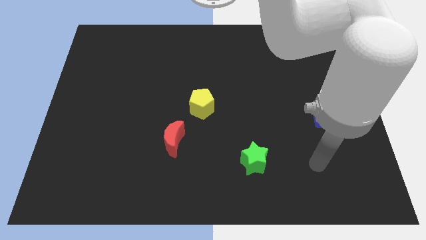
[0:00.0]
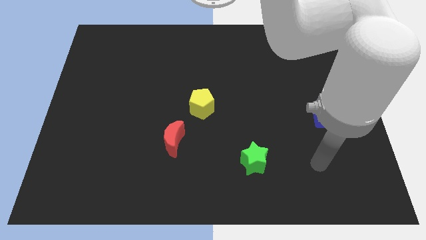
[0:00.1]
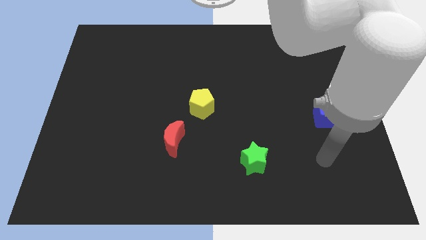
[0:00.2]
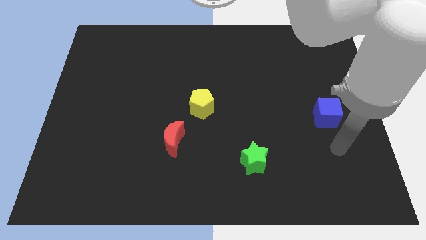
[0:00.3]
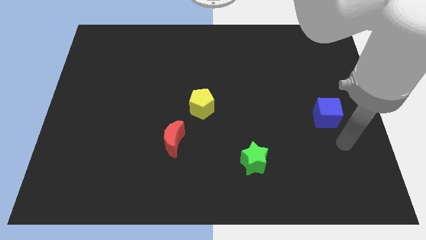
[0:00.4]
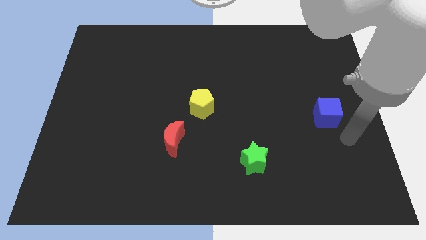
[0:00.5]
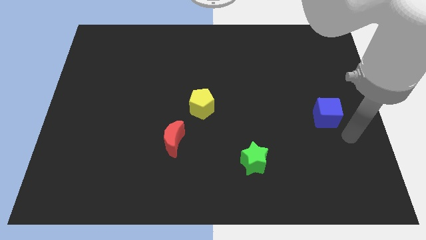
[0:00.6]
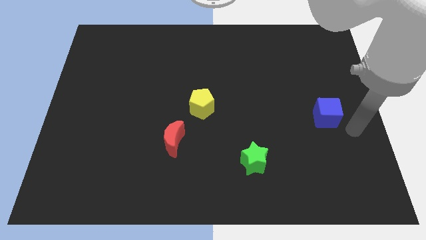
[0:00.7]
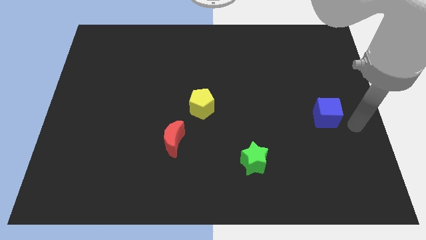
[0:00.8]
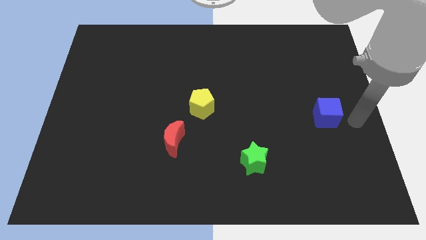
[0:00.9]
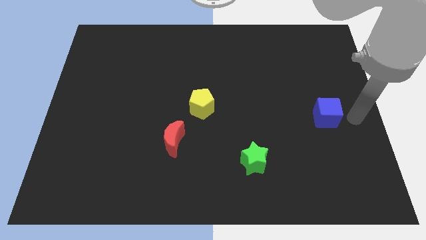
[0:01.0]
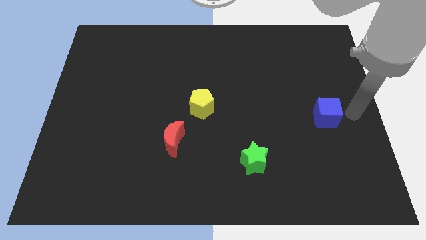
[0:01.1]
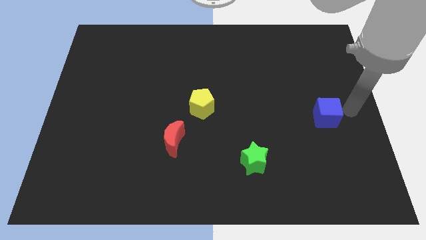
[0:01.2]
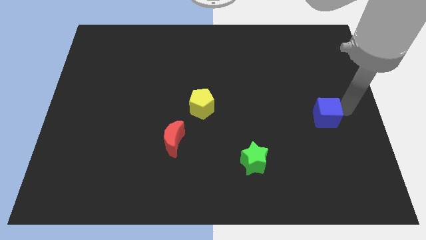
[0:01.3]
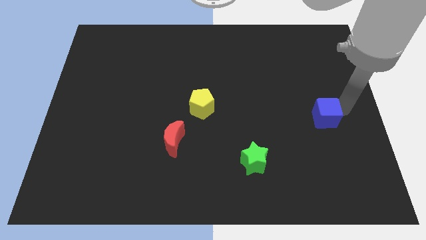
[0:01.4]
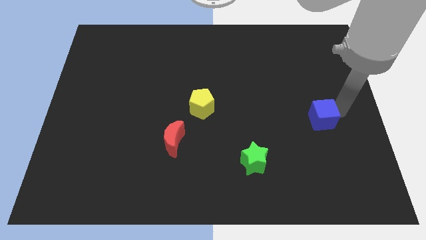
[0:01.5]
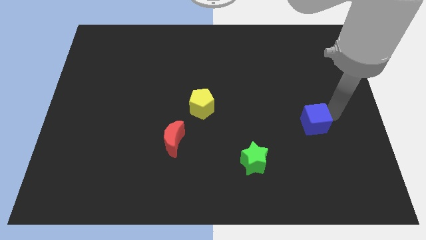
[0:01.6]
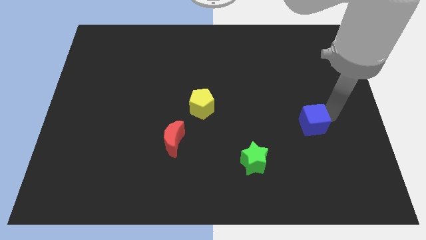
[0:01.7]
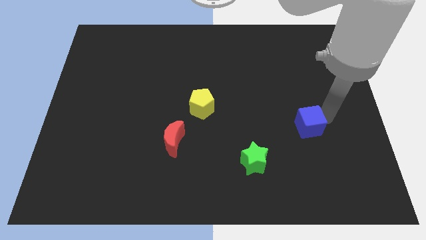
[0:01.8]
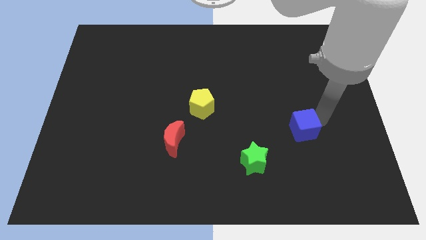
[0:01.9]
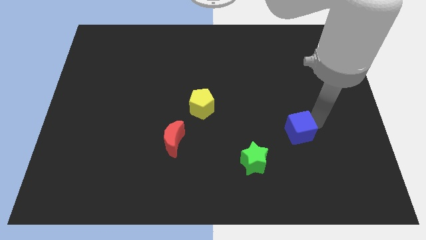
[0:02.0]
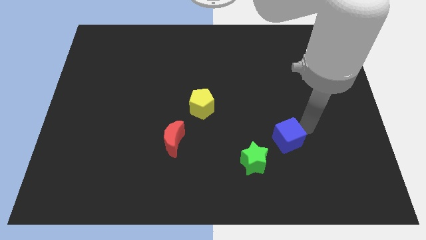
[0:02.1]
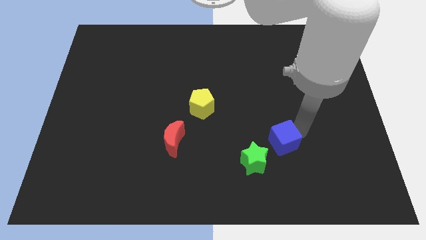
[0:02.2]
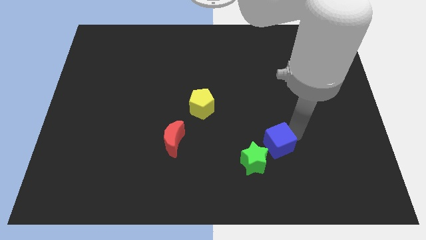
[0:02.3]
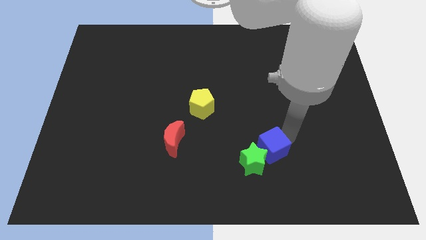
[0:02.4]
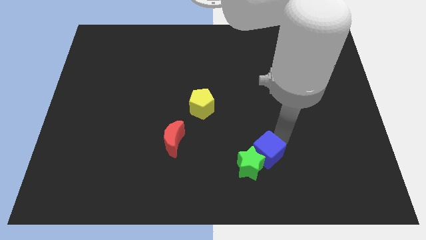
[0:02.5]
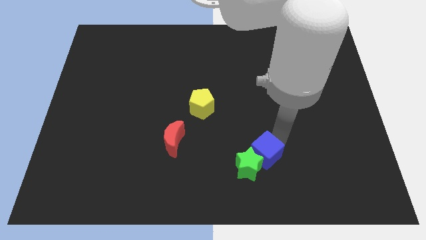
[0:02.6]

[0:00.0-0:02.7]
slide the blue cube to the green block

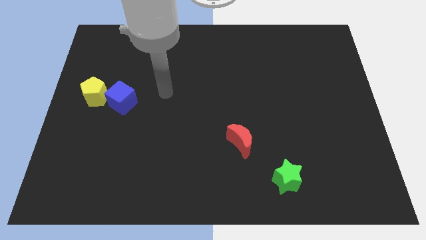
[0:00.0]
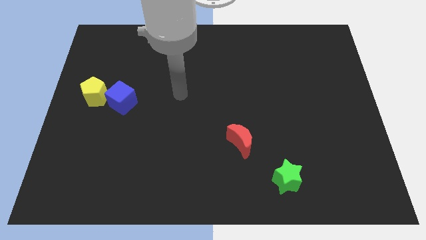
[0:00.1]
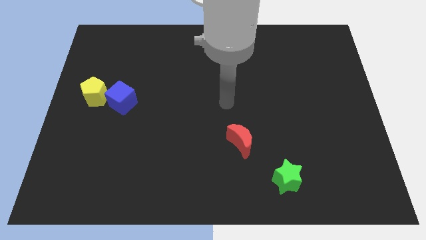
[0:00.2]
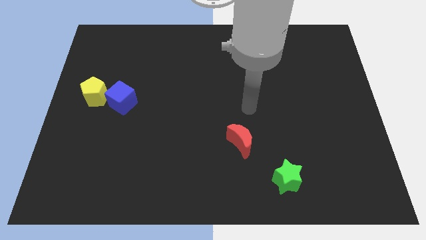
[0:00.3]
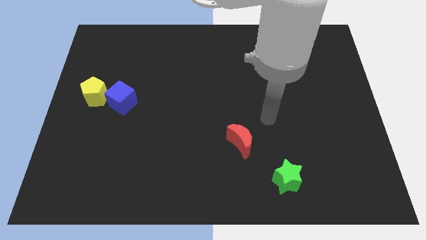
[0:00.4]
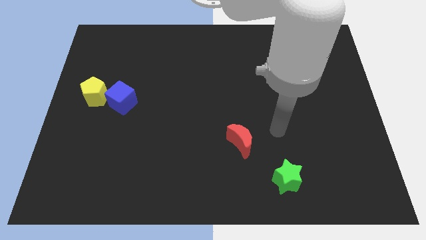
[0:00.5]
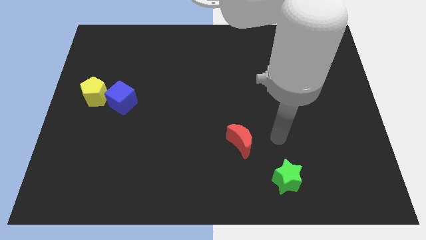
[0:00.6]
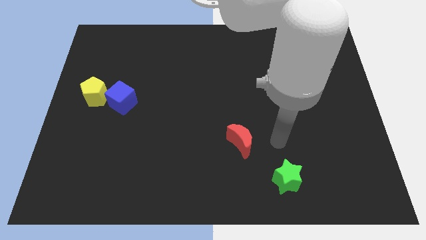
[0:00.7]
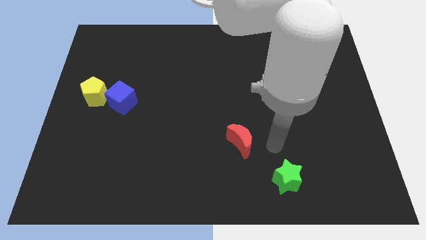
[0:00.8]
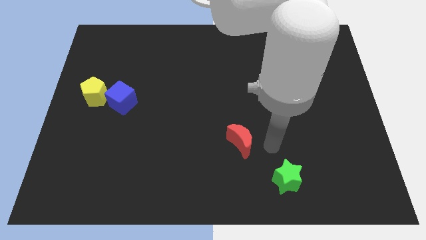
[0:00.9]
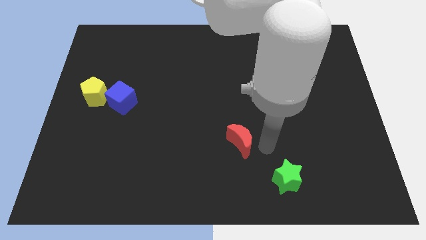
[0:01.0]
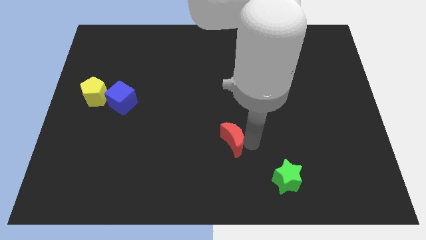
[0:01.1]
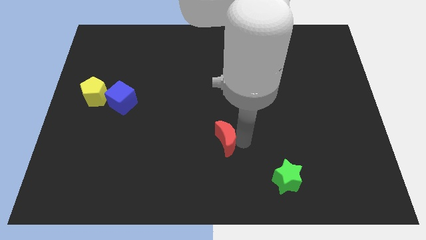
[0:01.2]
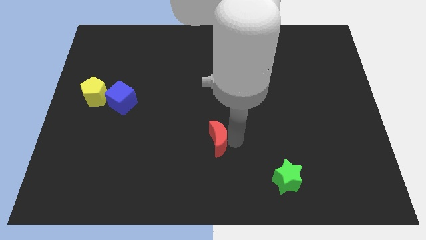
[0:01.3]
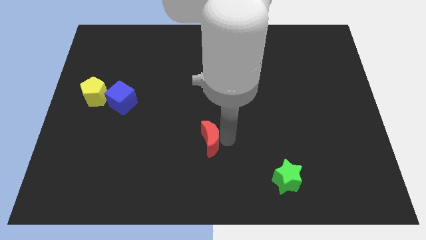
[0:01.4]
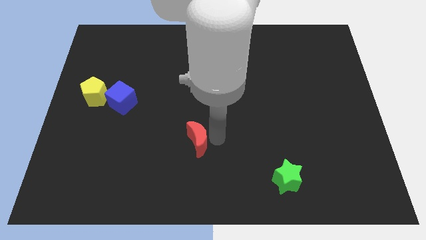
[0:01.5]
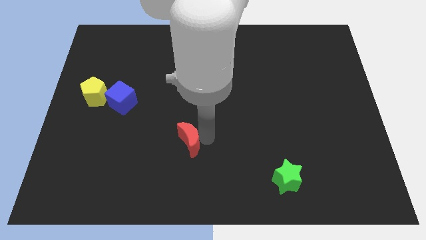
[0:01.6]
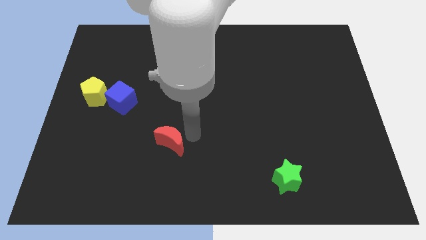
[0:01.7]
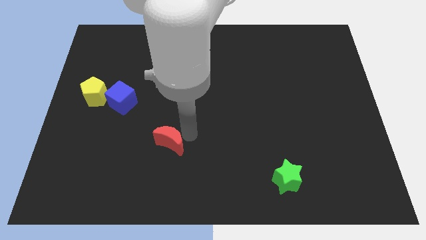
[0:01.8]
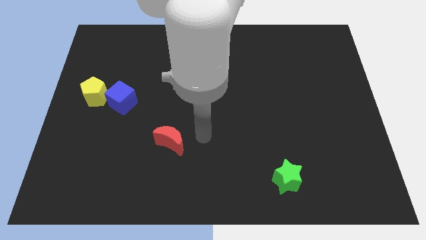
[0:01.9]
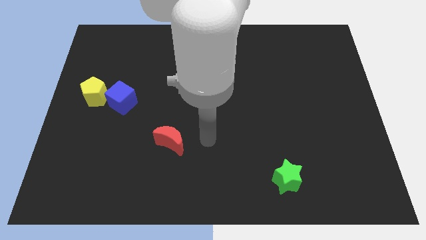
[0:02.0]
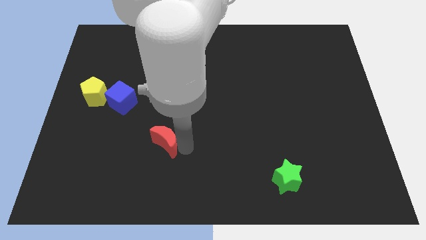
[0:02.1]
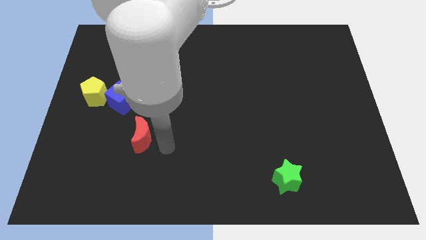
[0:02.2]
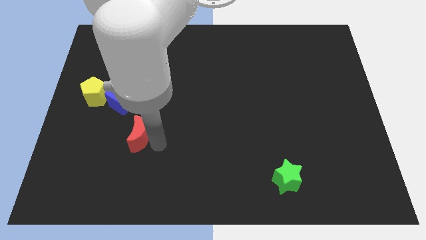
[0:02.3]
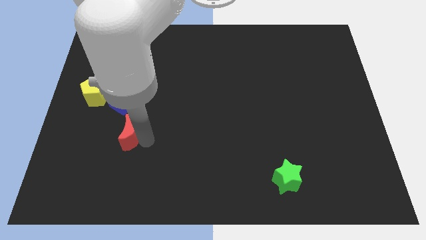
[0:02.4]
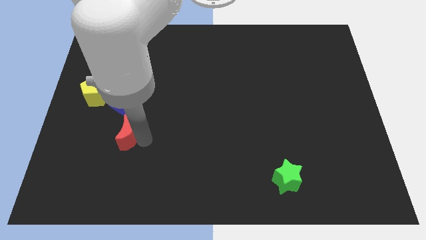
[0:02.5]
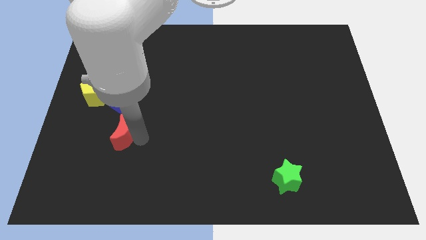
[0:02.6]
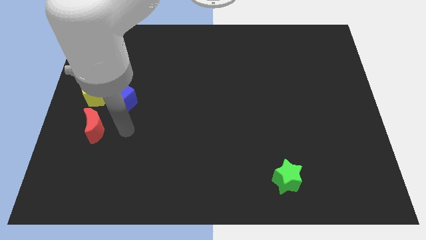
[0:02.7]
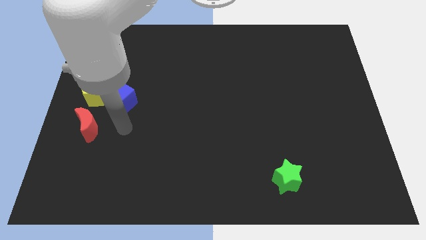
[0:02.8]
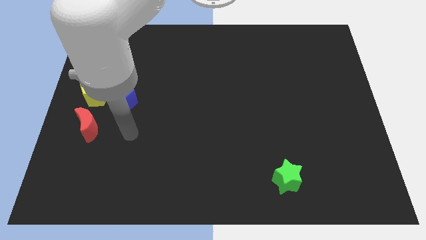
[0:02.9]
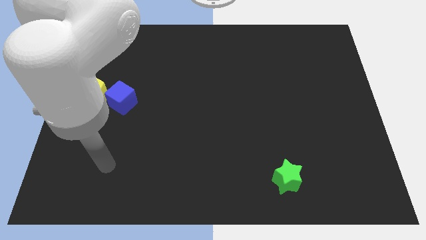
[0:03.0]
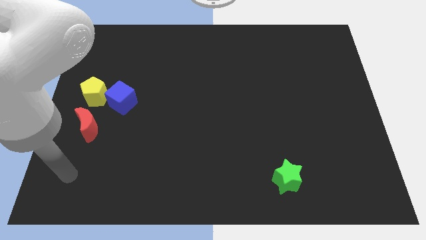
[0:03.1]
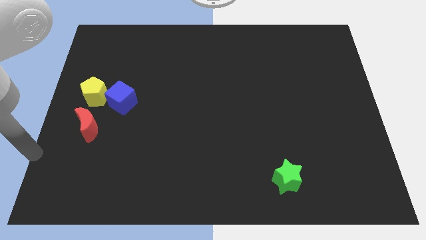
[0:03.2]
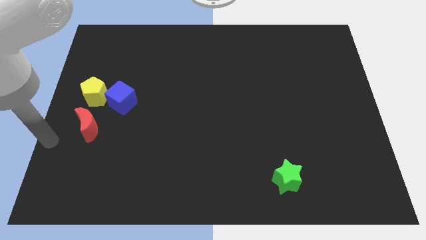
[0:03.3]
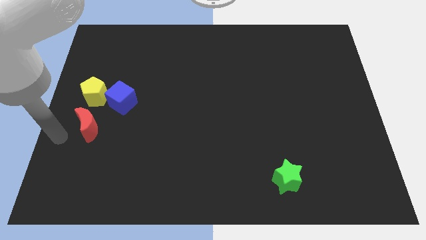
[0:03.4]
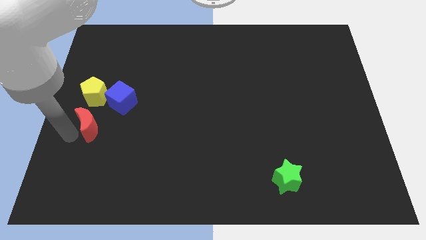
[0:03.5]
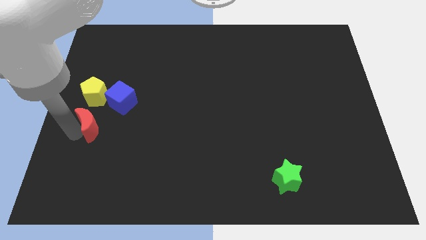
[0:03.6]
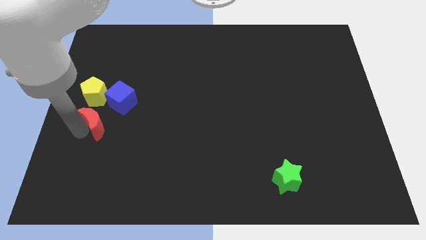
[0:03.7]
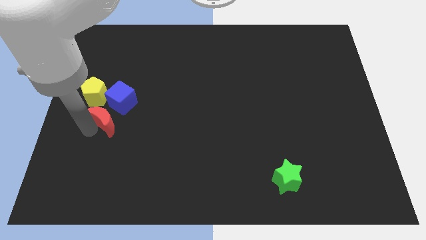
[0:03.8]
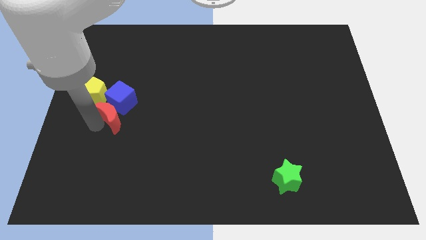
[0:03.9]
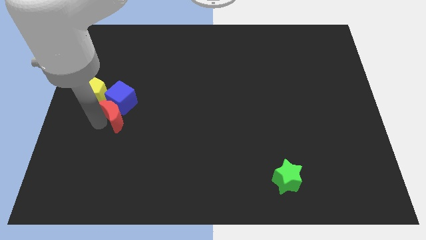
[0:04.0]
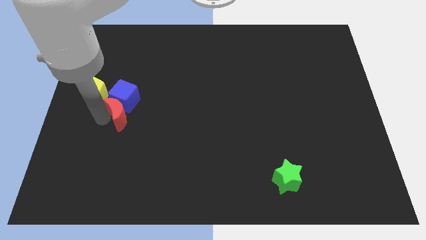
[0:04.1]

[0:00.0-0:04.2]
push the red block close to the cube

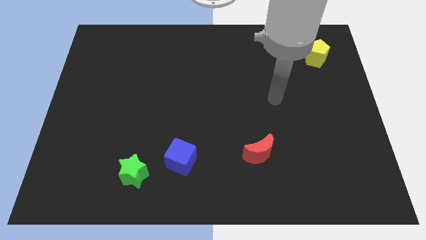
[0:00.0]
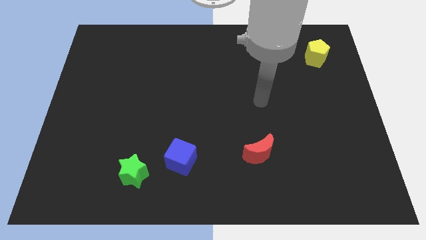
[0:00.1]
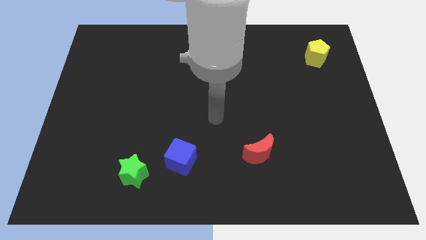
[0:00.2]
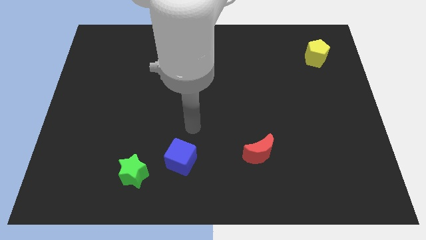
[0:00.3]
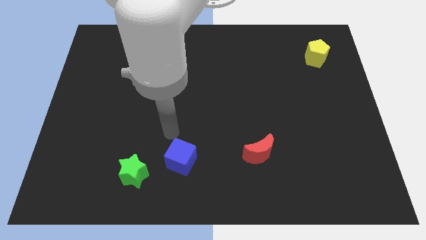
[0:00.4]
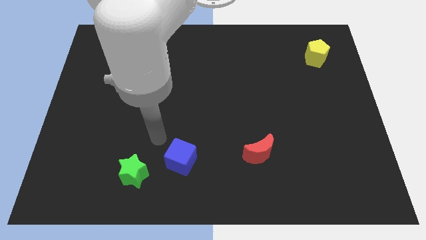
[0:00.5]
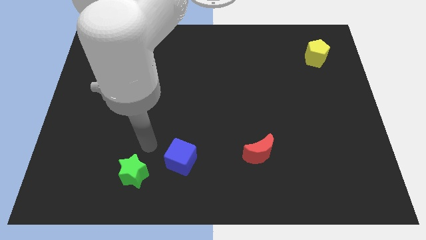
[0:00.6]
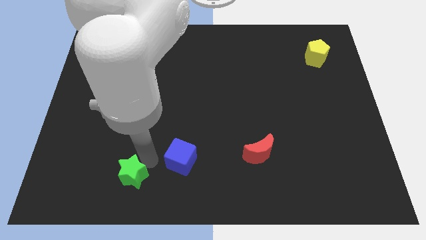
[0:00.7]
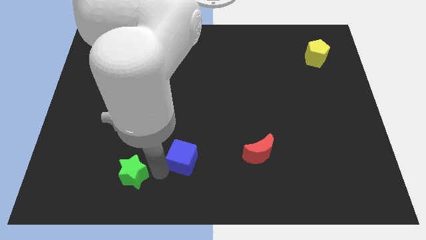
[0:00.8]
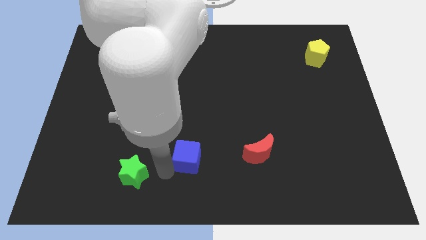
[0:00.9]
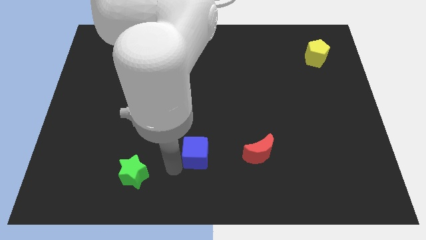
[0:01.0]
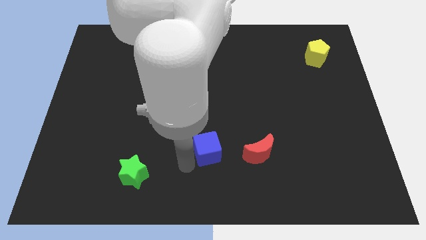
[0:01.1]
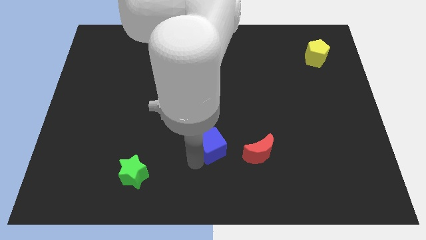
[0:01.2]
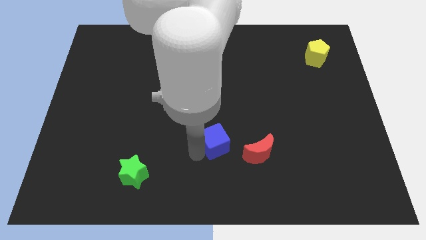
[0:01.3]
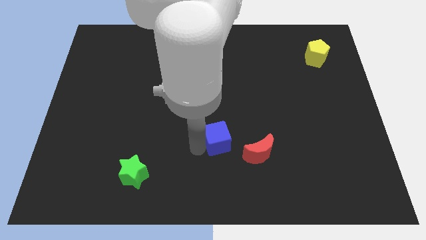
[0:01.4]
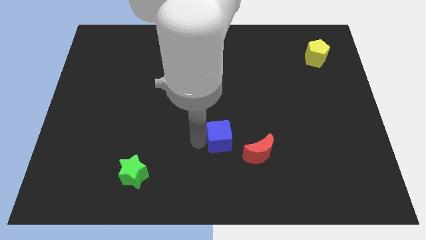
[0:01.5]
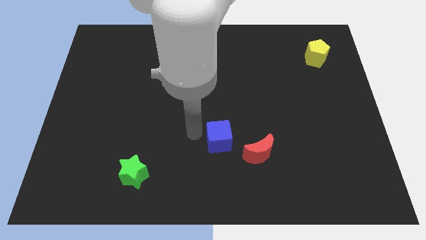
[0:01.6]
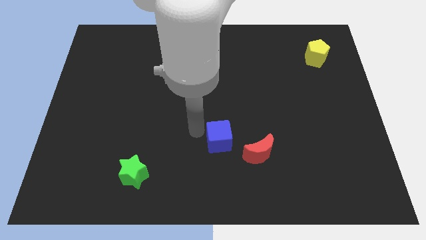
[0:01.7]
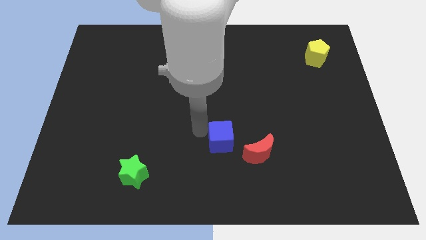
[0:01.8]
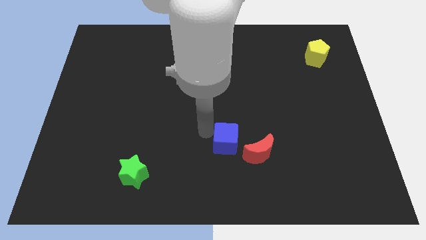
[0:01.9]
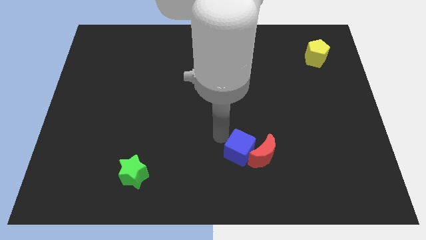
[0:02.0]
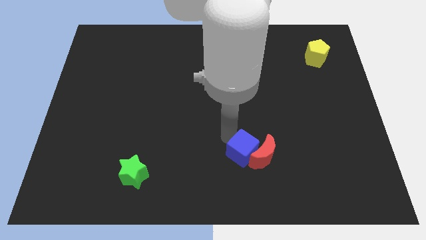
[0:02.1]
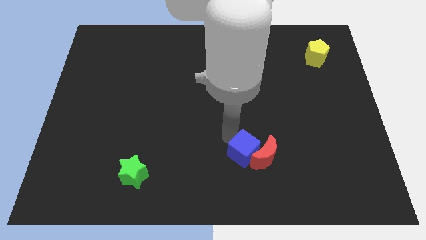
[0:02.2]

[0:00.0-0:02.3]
move the blue cube towards the moon
